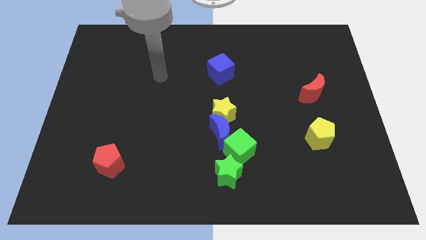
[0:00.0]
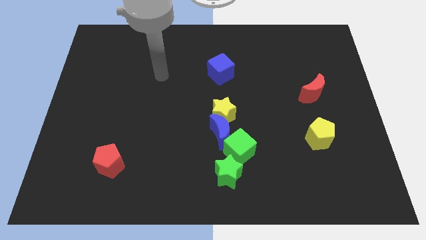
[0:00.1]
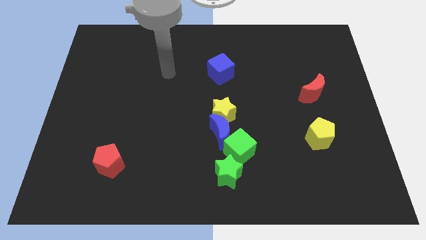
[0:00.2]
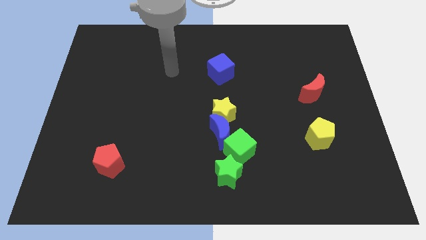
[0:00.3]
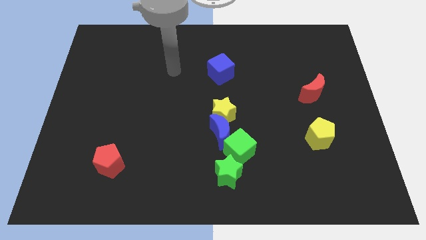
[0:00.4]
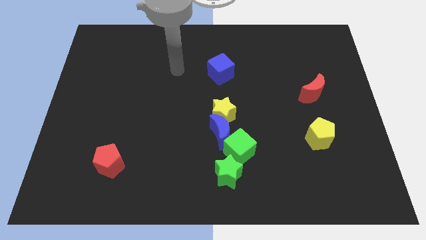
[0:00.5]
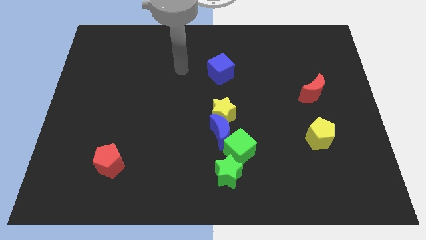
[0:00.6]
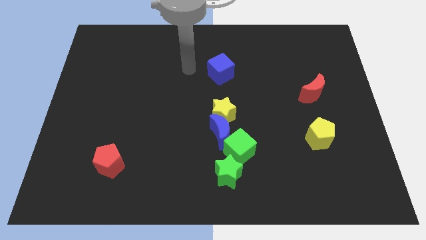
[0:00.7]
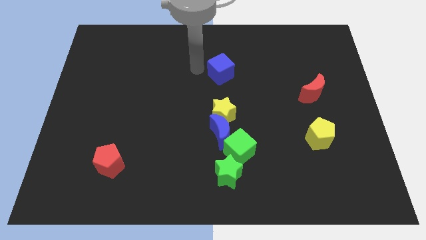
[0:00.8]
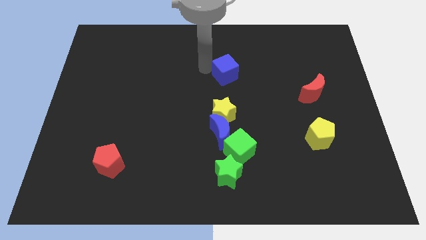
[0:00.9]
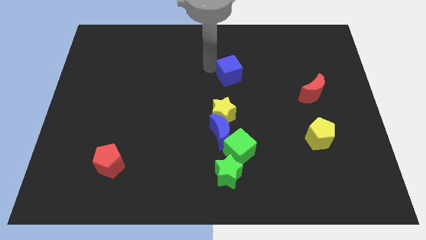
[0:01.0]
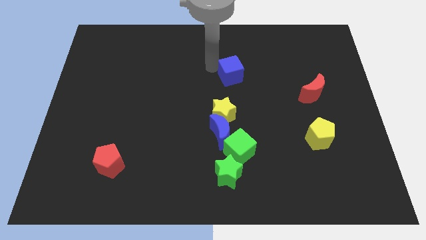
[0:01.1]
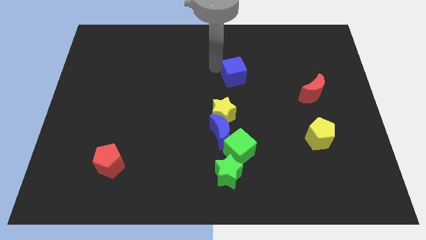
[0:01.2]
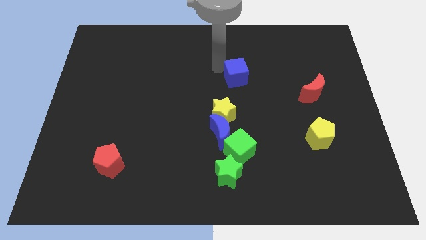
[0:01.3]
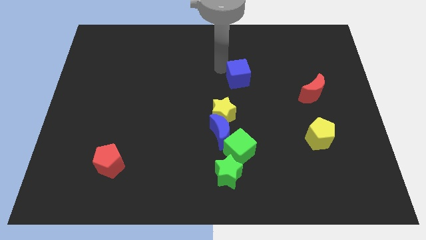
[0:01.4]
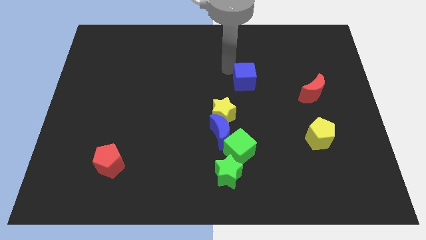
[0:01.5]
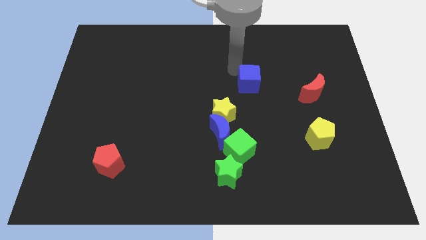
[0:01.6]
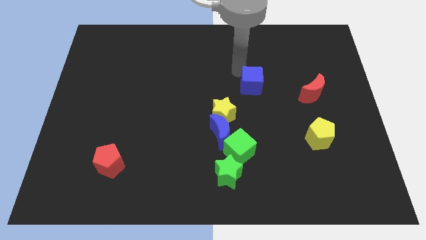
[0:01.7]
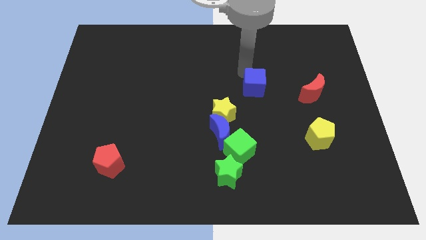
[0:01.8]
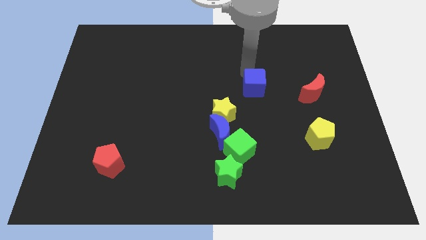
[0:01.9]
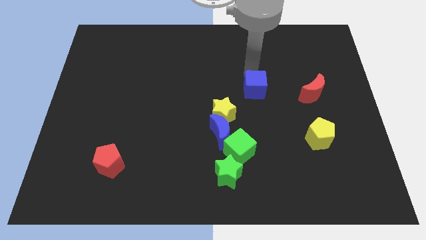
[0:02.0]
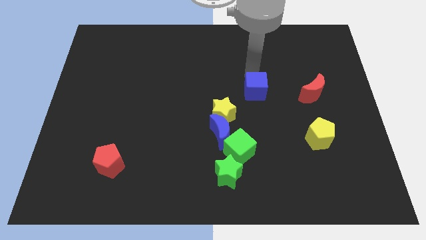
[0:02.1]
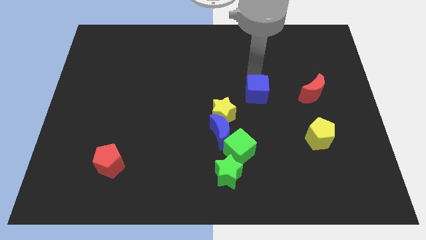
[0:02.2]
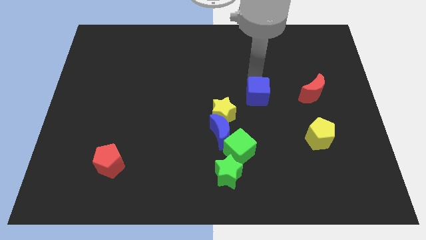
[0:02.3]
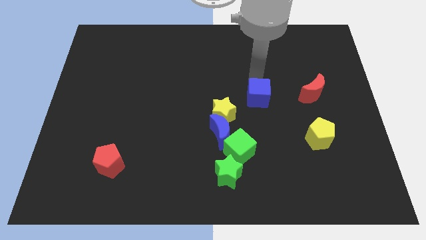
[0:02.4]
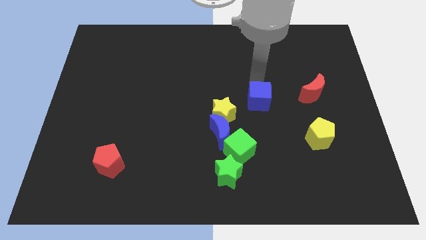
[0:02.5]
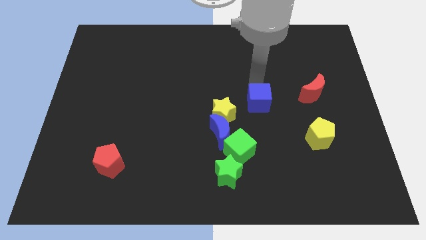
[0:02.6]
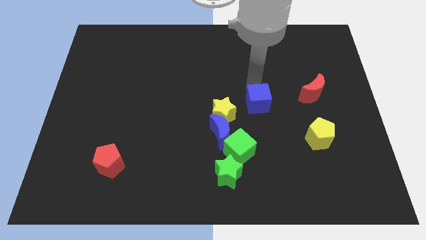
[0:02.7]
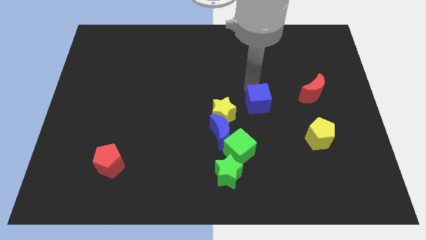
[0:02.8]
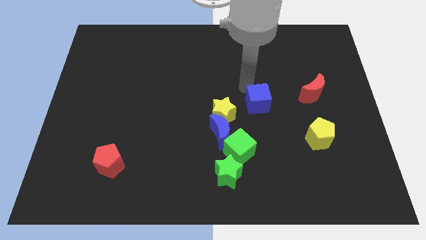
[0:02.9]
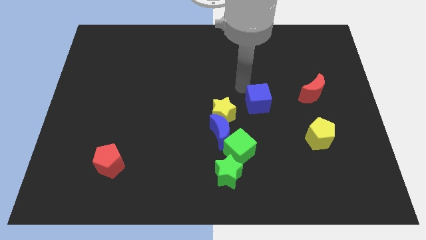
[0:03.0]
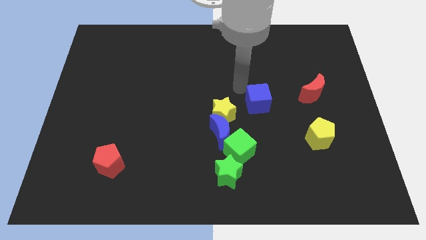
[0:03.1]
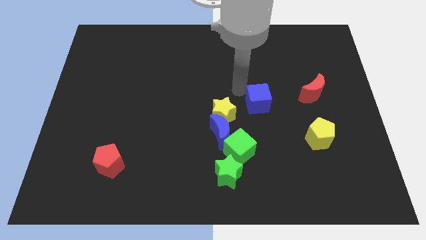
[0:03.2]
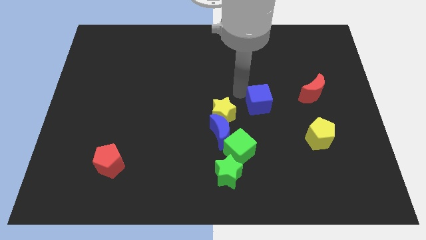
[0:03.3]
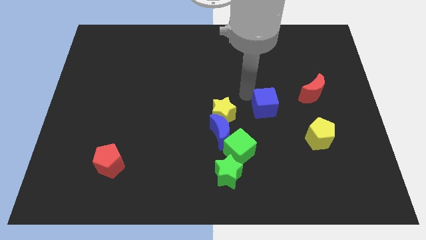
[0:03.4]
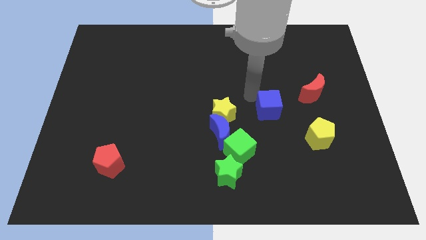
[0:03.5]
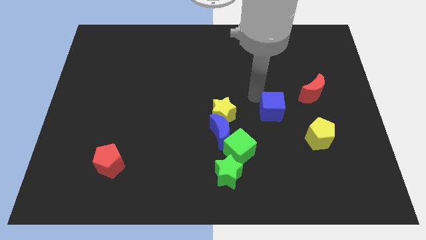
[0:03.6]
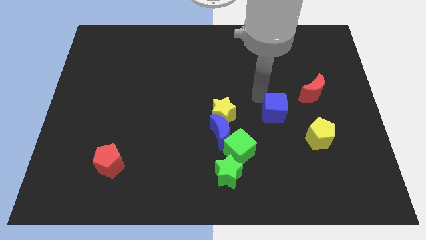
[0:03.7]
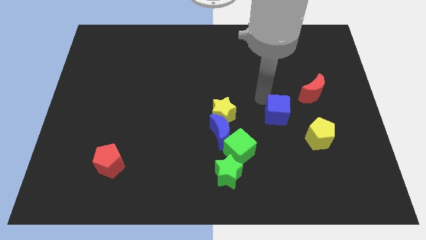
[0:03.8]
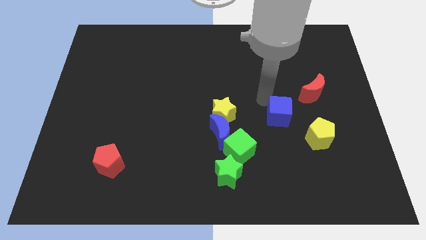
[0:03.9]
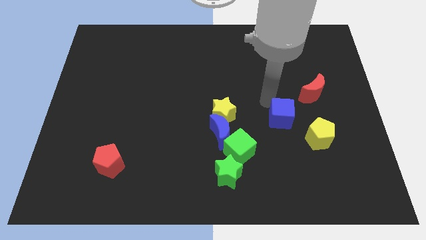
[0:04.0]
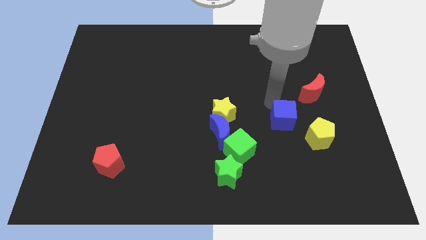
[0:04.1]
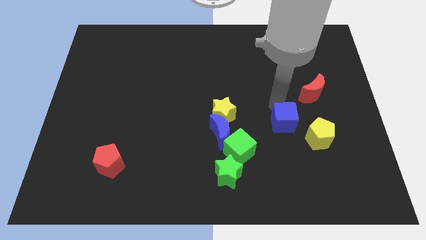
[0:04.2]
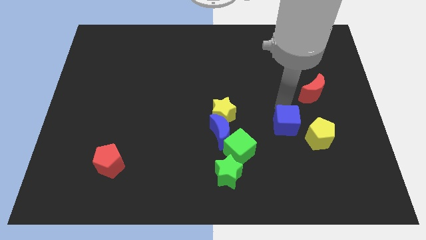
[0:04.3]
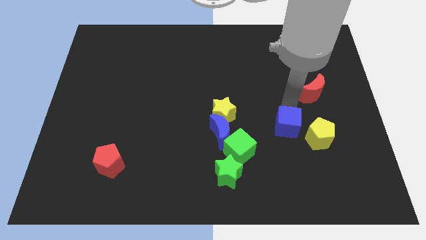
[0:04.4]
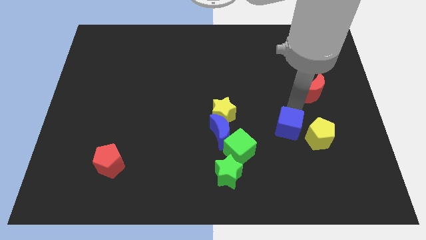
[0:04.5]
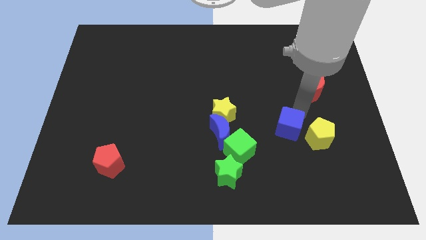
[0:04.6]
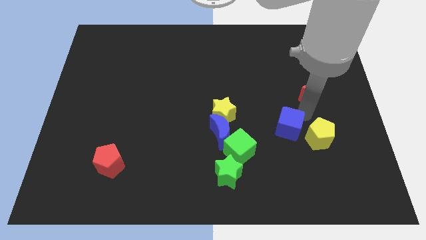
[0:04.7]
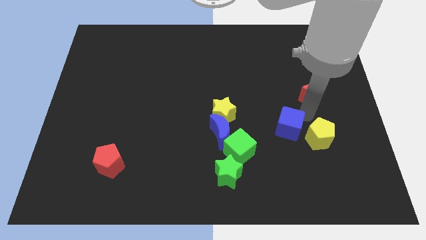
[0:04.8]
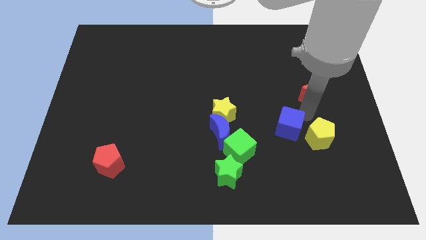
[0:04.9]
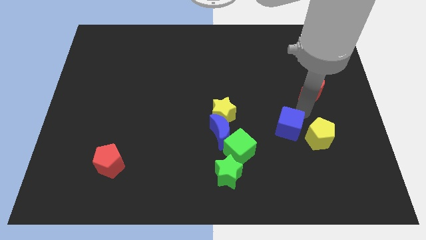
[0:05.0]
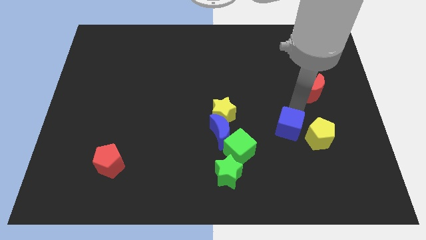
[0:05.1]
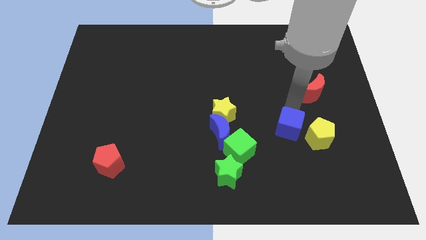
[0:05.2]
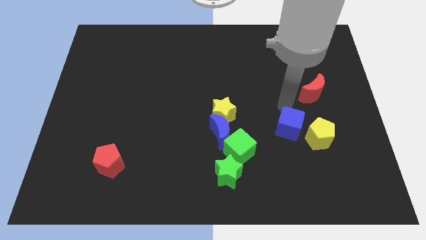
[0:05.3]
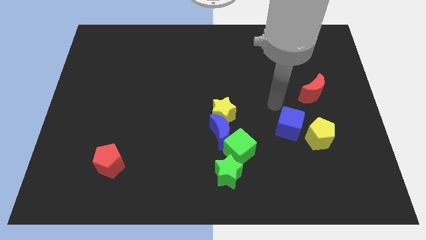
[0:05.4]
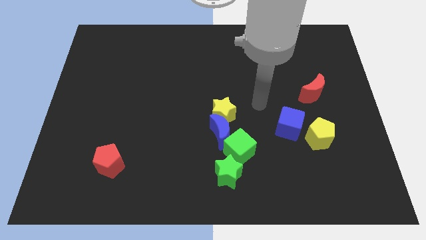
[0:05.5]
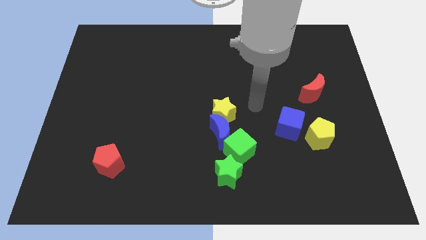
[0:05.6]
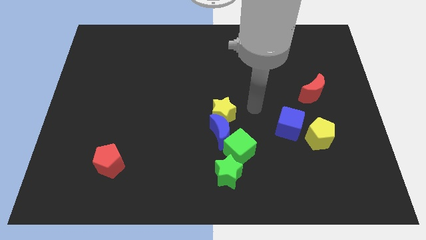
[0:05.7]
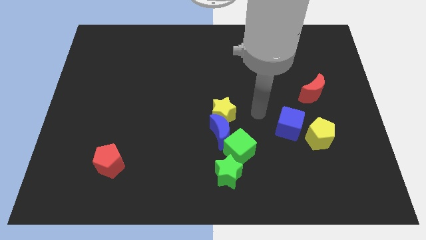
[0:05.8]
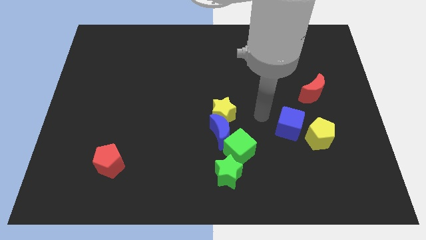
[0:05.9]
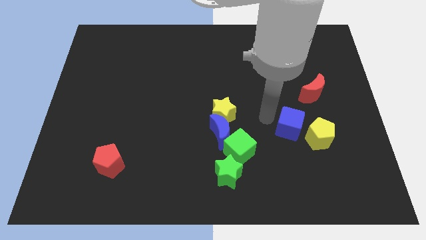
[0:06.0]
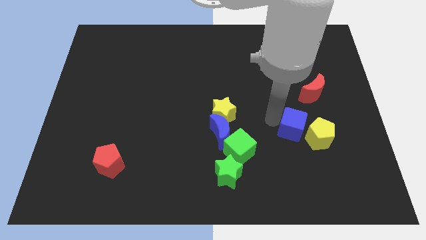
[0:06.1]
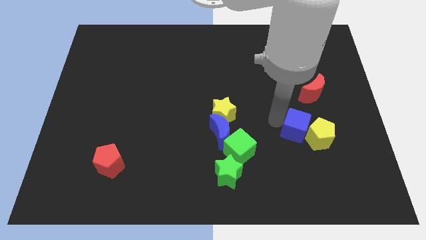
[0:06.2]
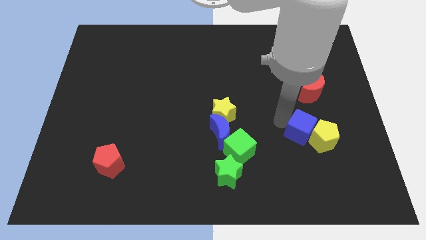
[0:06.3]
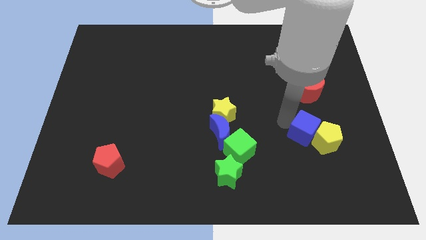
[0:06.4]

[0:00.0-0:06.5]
put the blue cube to the yellow pentagon

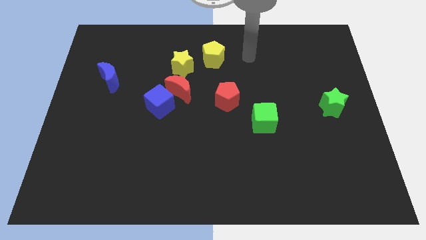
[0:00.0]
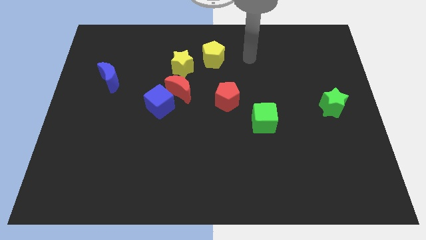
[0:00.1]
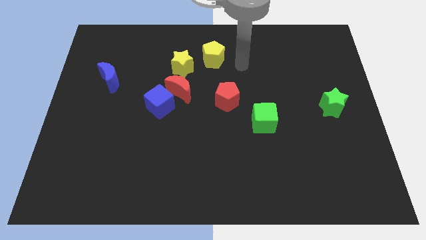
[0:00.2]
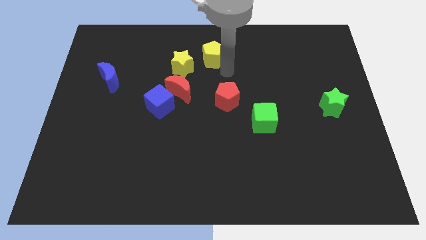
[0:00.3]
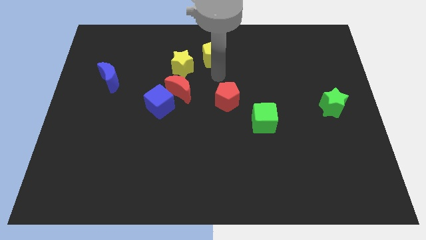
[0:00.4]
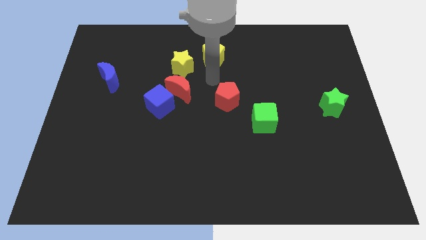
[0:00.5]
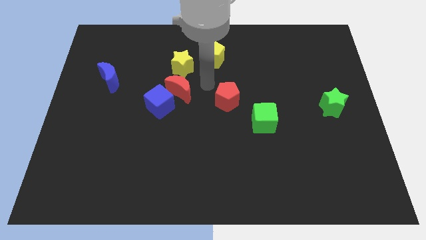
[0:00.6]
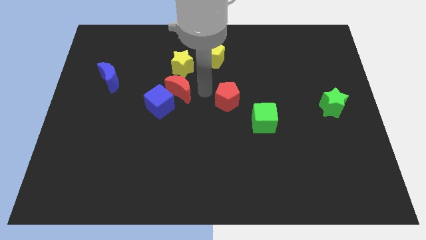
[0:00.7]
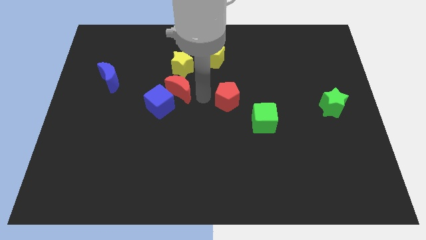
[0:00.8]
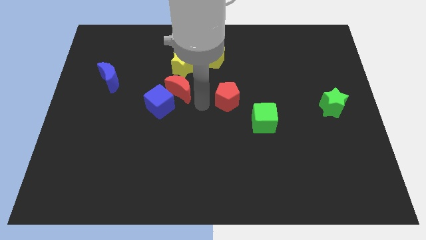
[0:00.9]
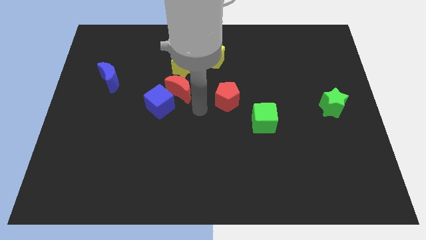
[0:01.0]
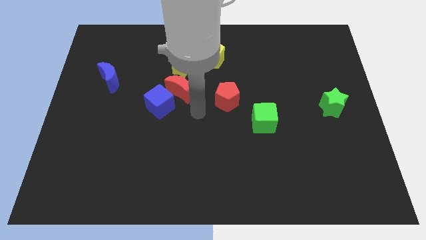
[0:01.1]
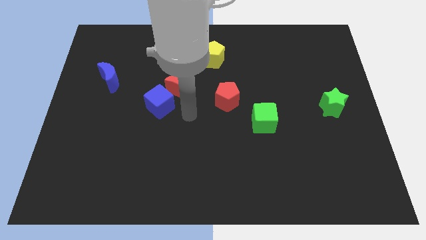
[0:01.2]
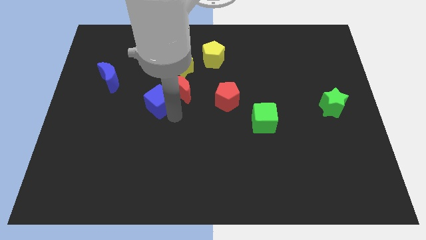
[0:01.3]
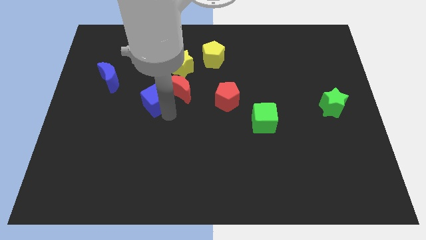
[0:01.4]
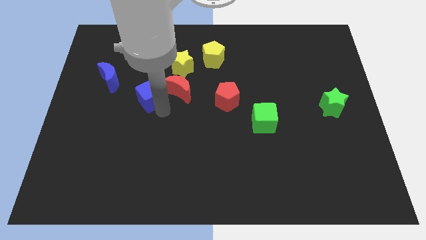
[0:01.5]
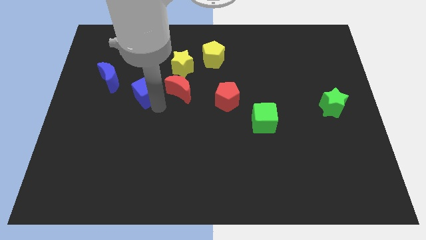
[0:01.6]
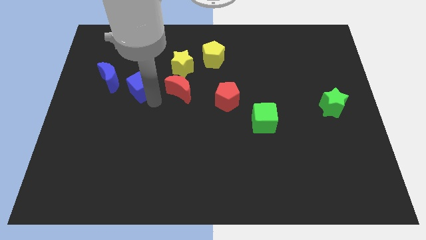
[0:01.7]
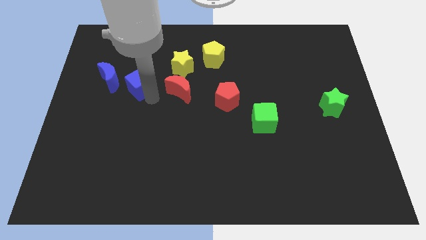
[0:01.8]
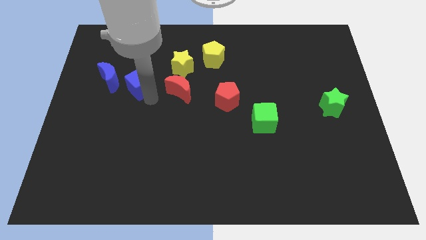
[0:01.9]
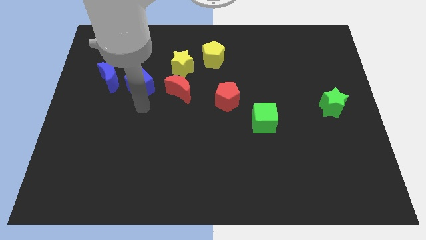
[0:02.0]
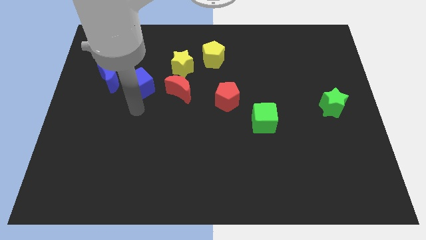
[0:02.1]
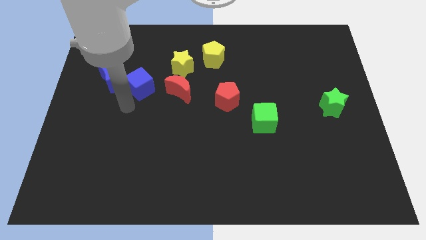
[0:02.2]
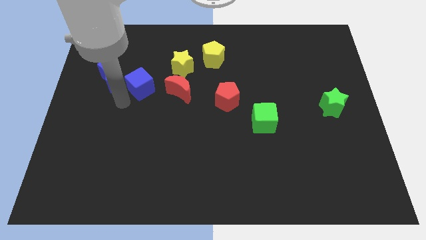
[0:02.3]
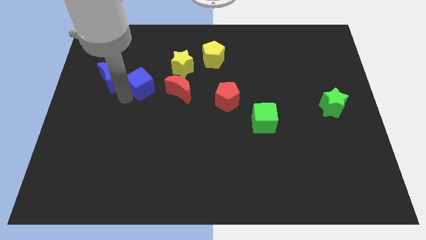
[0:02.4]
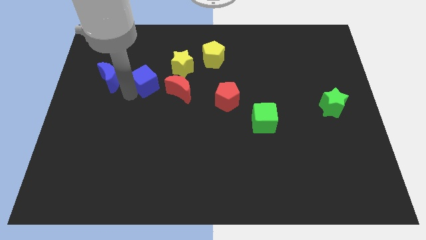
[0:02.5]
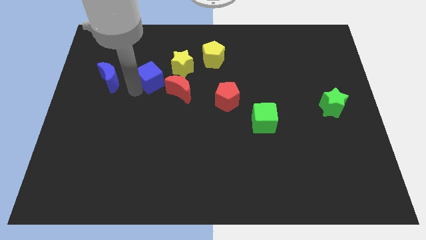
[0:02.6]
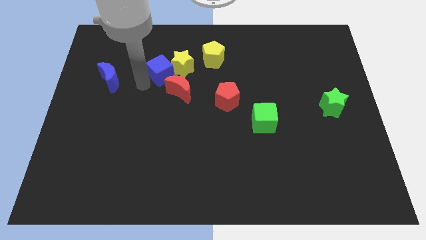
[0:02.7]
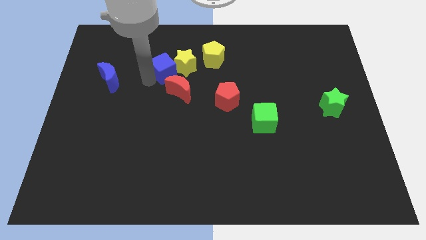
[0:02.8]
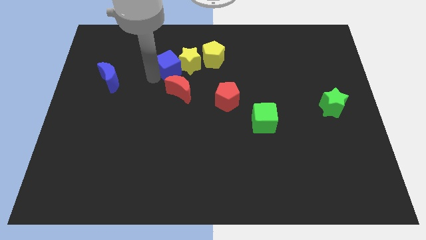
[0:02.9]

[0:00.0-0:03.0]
push the blue cube next to the yellow star
